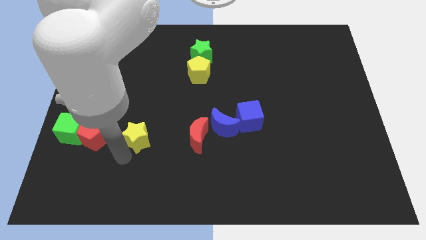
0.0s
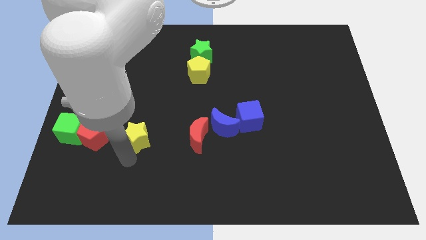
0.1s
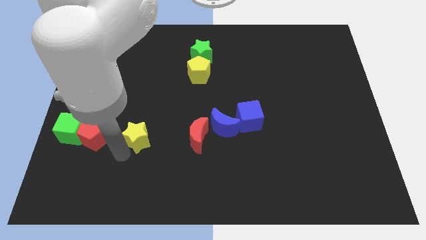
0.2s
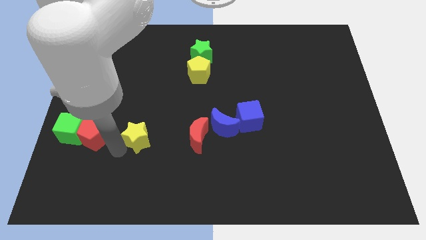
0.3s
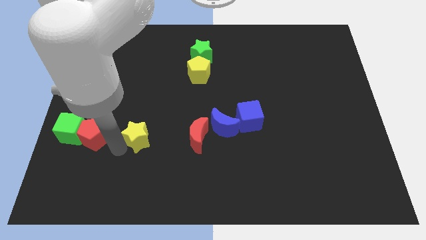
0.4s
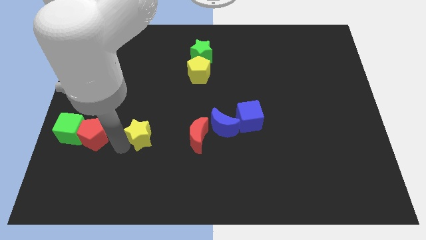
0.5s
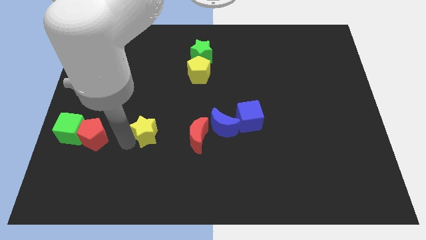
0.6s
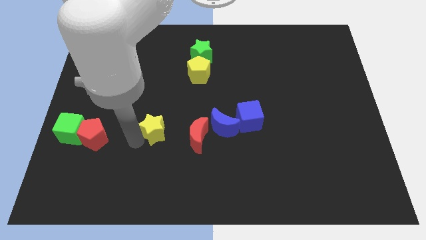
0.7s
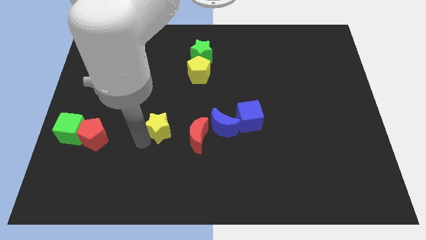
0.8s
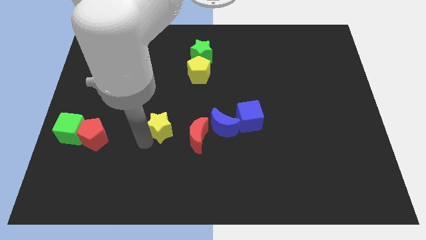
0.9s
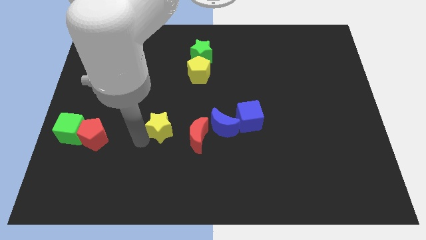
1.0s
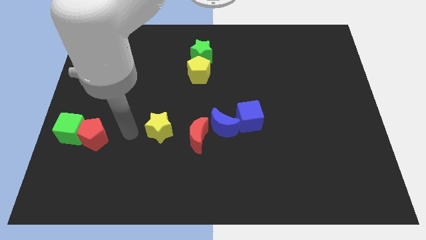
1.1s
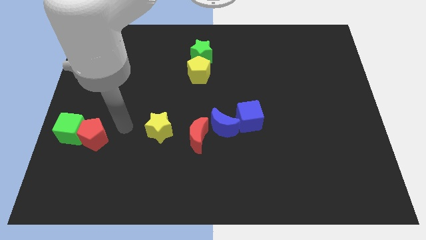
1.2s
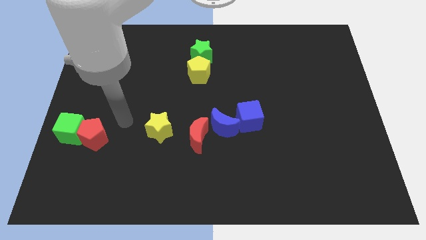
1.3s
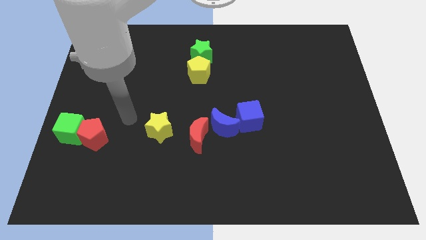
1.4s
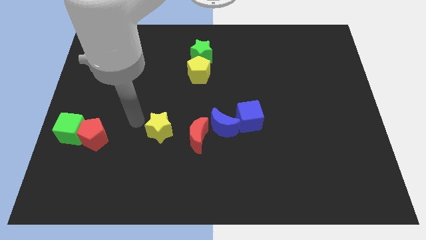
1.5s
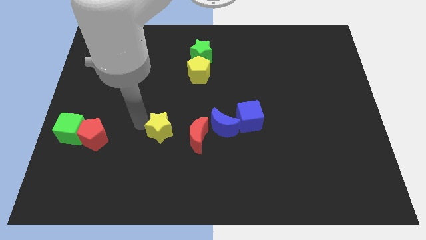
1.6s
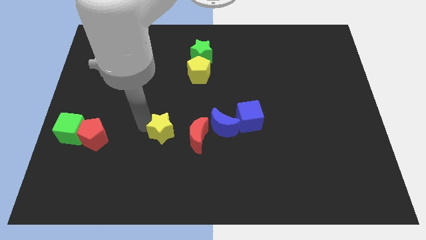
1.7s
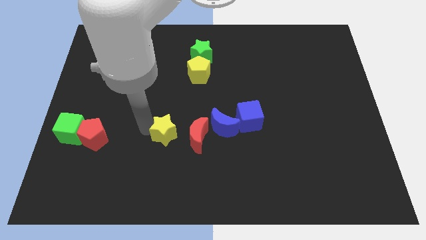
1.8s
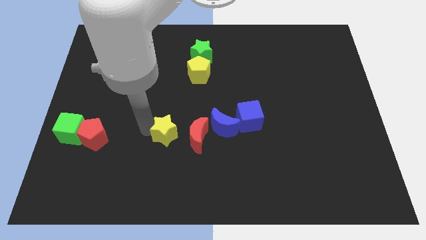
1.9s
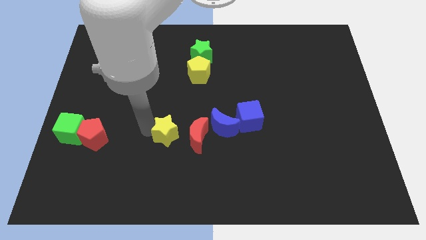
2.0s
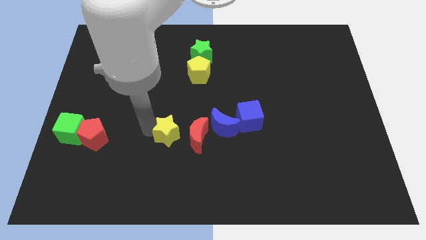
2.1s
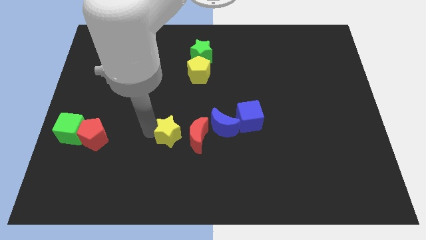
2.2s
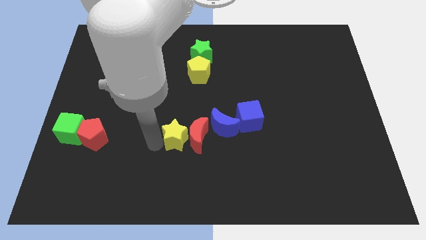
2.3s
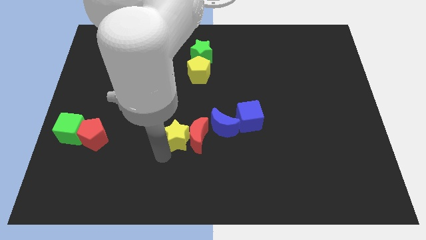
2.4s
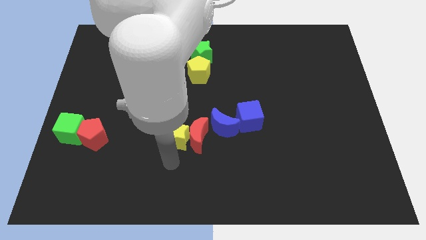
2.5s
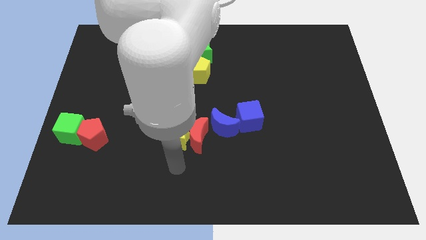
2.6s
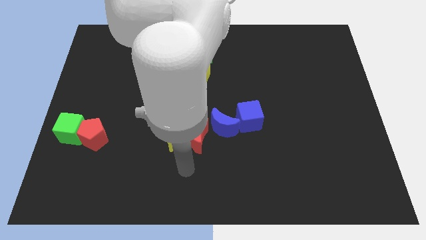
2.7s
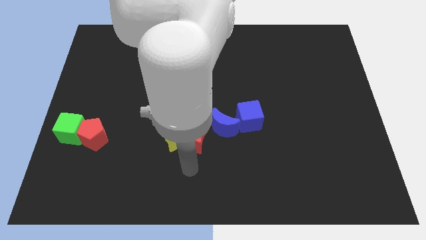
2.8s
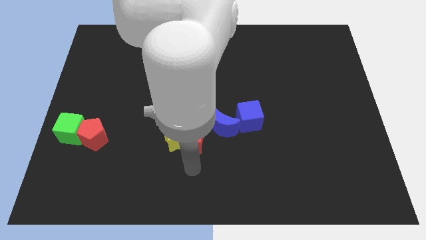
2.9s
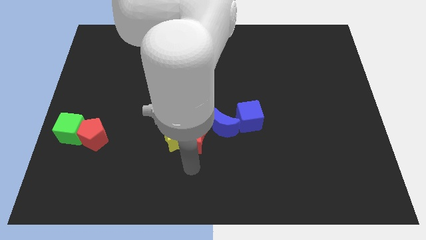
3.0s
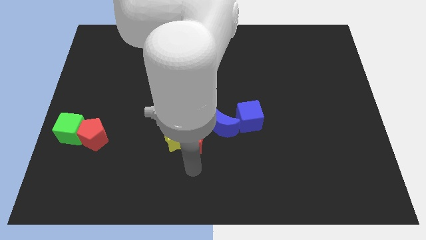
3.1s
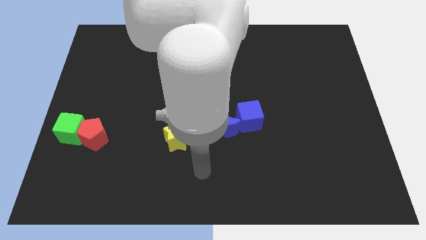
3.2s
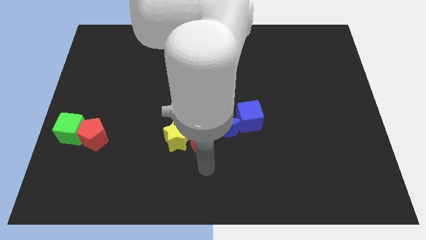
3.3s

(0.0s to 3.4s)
push the yellow star close left to the red crescent

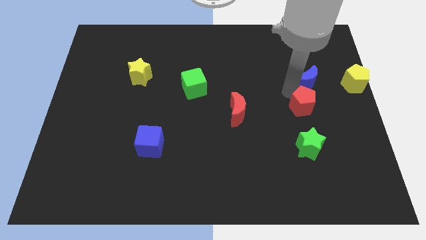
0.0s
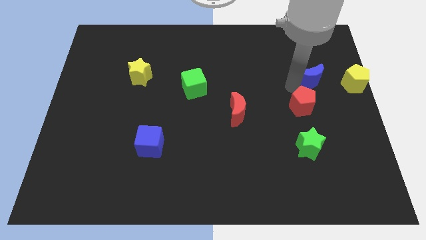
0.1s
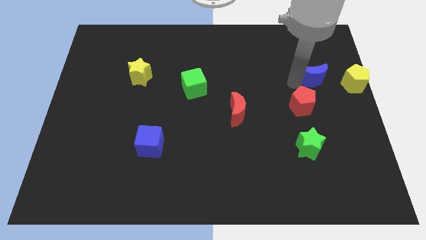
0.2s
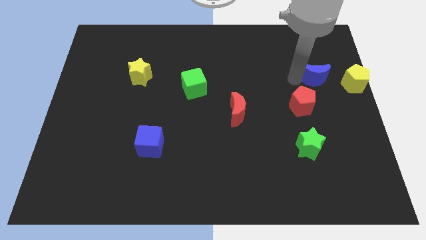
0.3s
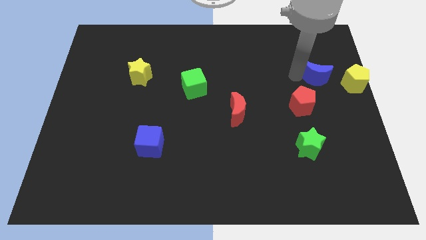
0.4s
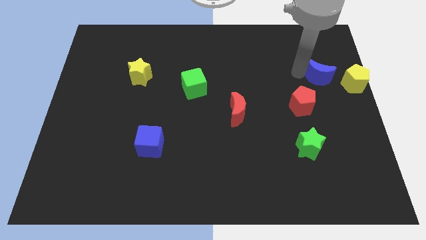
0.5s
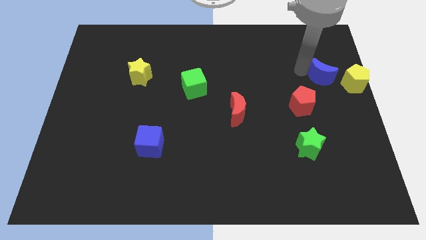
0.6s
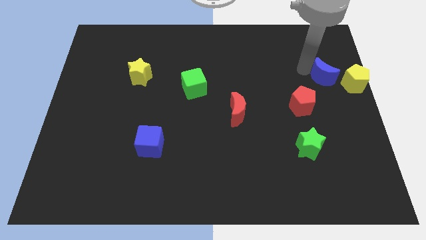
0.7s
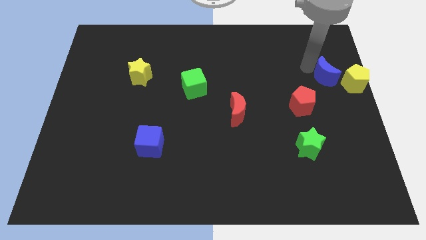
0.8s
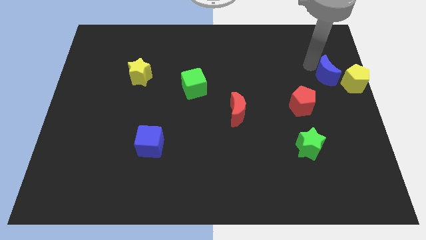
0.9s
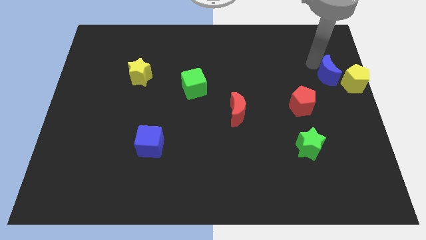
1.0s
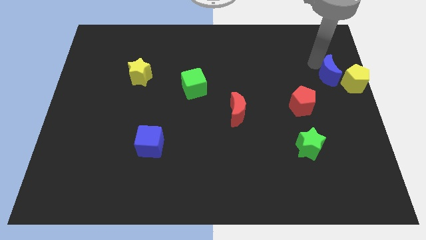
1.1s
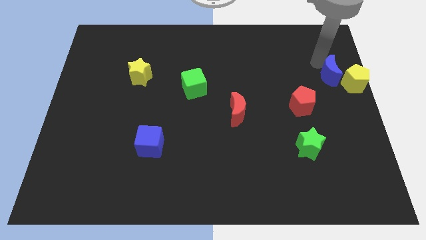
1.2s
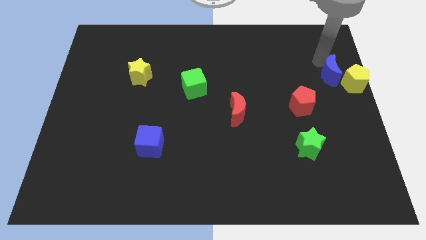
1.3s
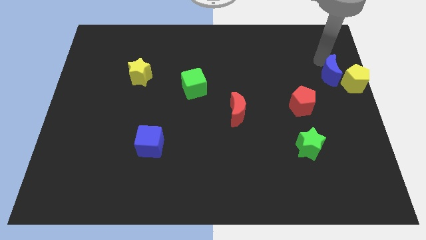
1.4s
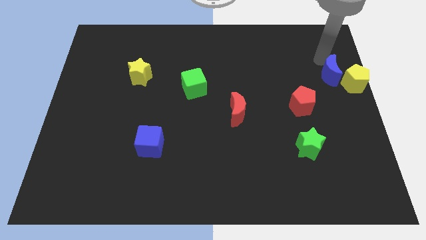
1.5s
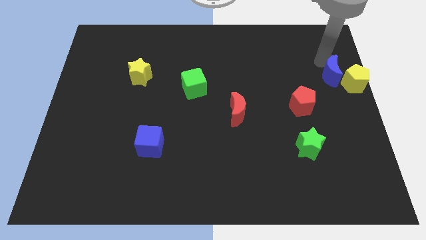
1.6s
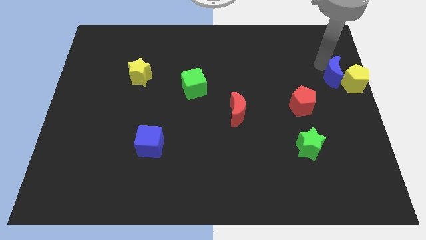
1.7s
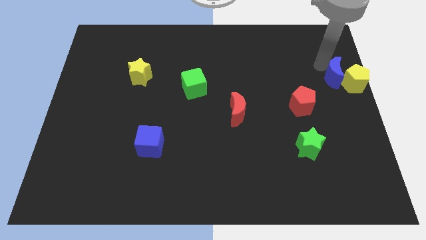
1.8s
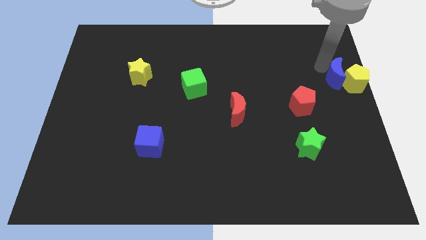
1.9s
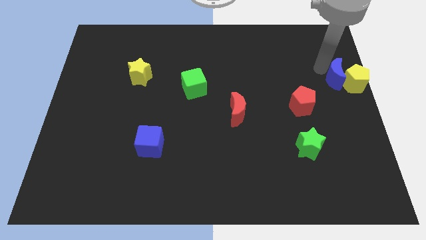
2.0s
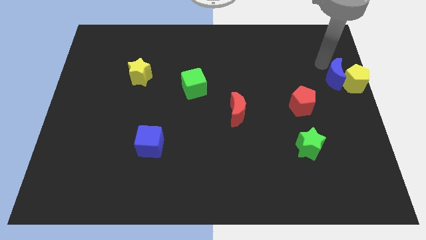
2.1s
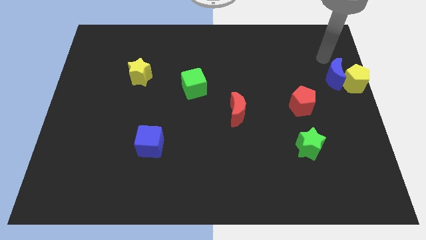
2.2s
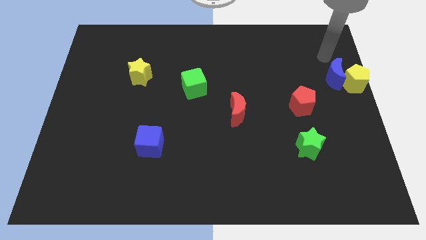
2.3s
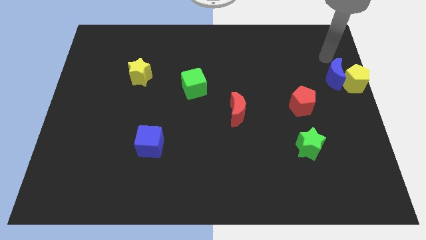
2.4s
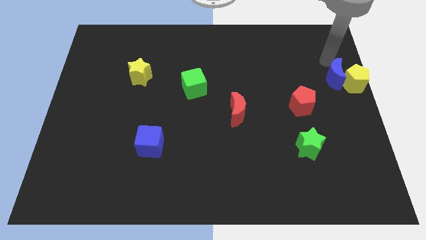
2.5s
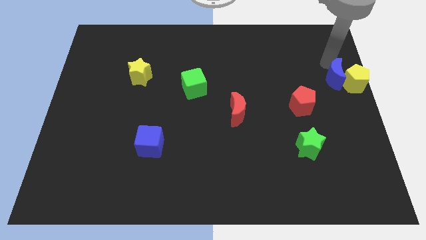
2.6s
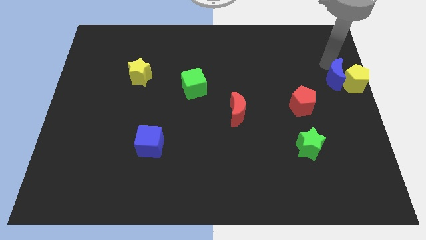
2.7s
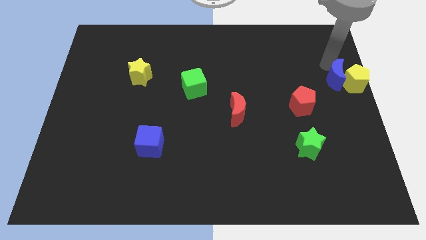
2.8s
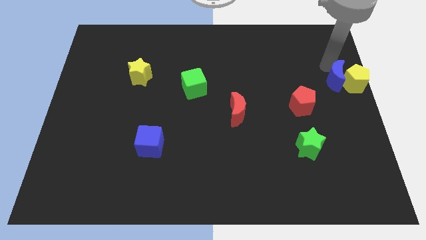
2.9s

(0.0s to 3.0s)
place blue crescent beside yellow pentagon

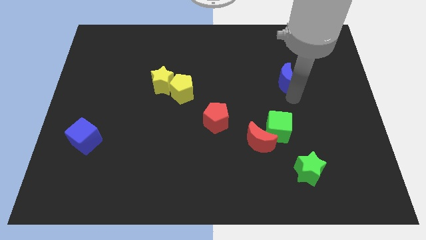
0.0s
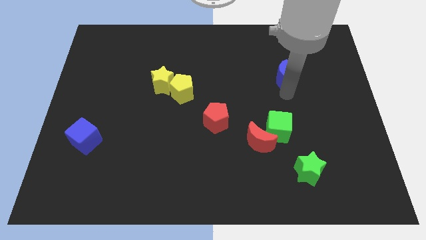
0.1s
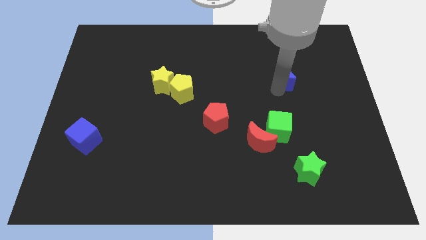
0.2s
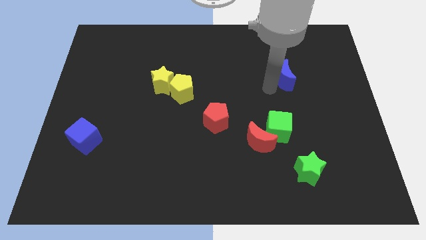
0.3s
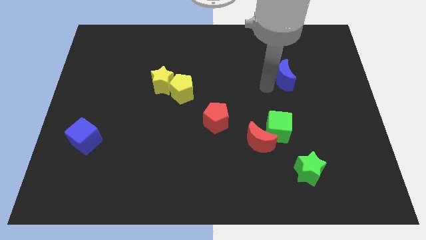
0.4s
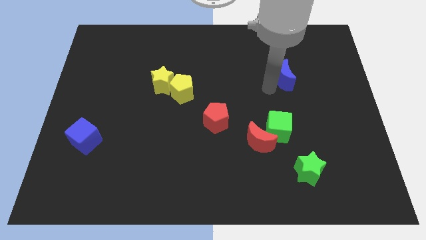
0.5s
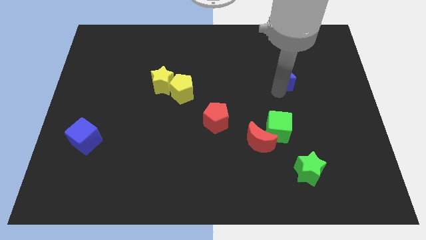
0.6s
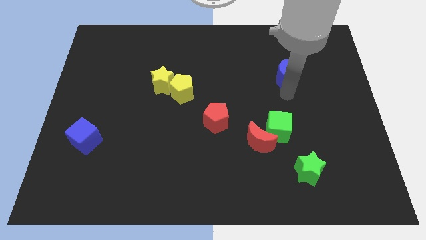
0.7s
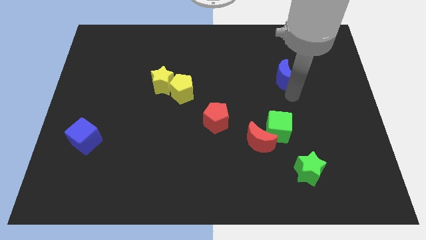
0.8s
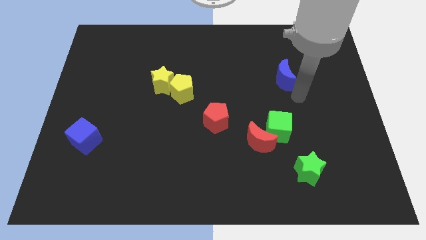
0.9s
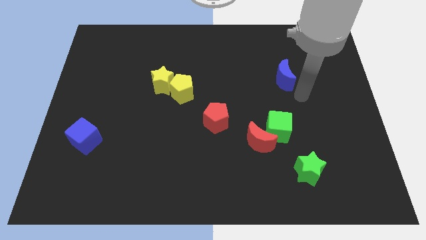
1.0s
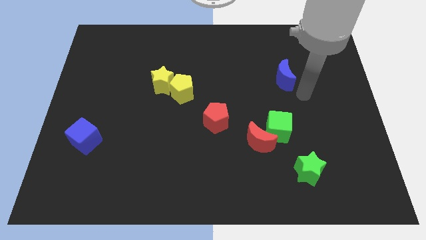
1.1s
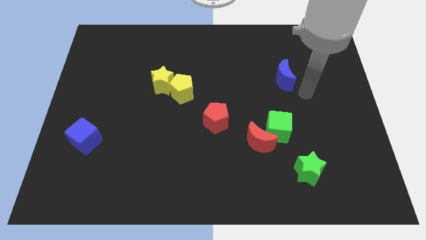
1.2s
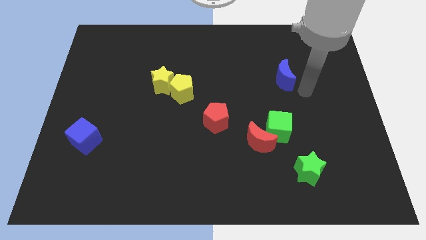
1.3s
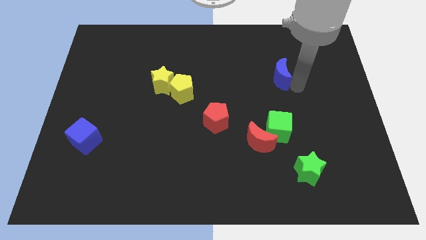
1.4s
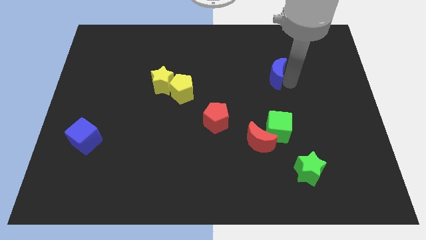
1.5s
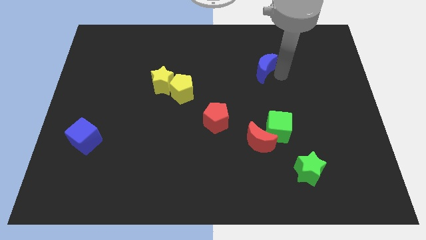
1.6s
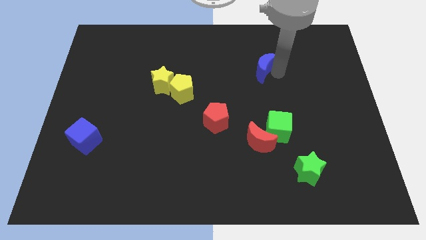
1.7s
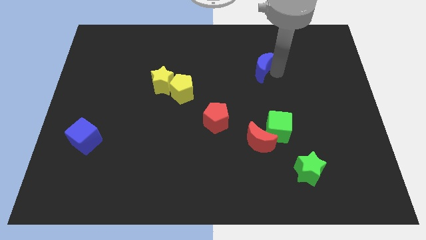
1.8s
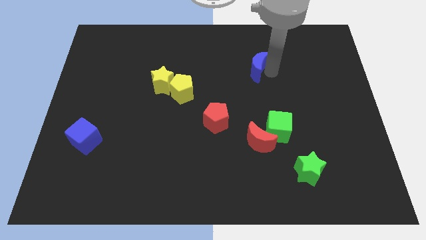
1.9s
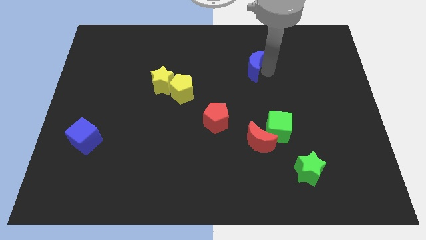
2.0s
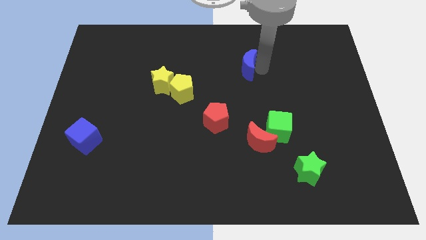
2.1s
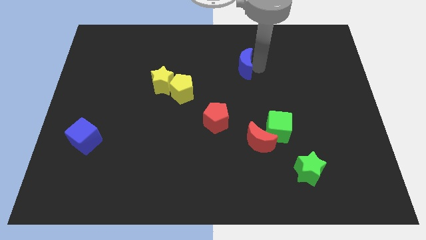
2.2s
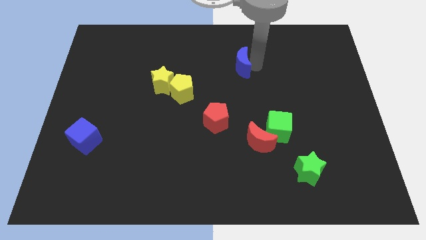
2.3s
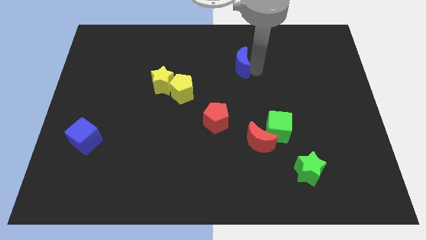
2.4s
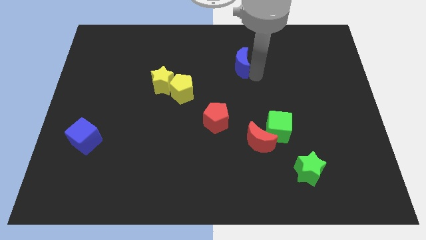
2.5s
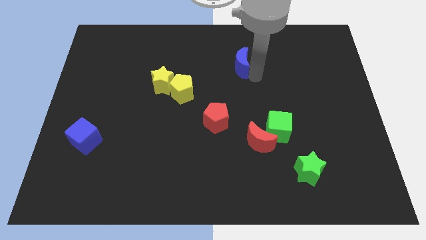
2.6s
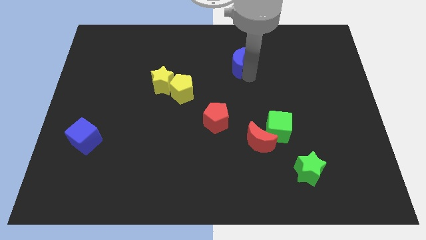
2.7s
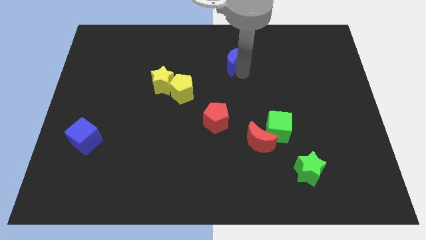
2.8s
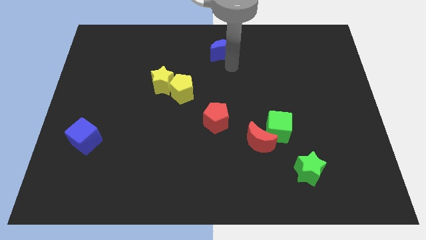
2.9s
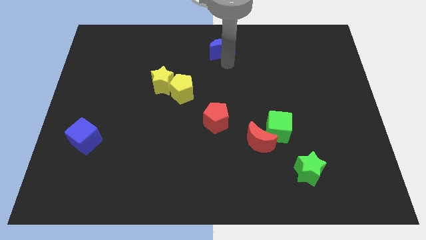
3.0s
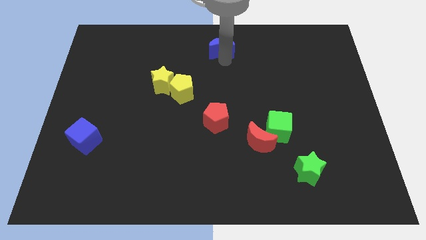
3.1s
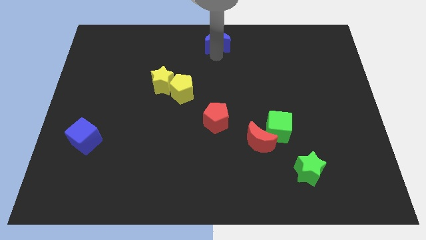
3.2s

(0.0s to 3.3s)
drag the blue moon to the top center of the board
